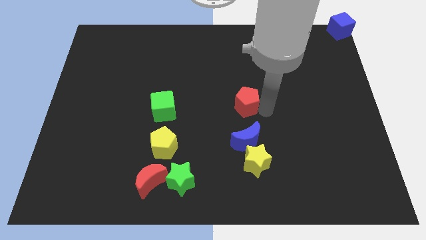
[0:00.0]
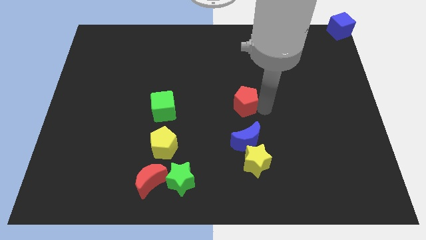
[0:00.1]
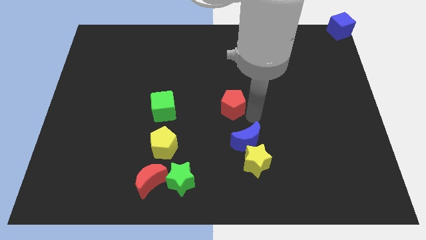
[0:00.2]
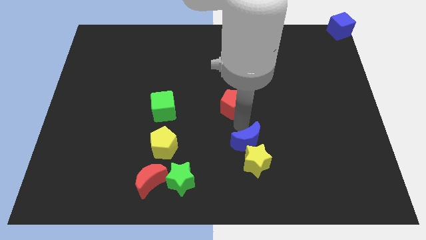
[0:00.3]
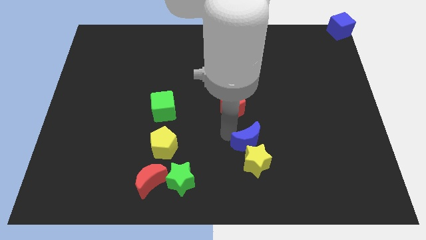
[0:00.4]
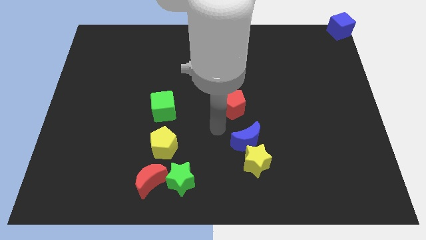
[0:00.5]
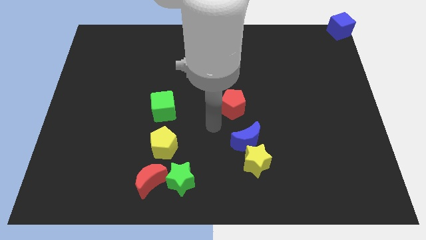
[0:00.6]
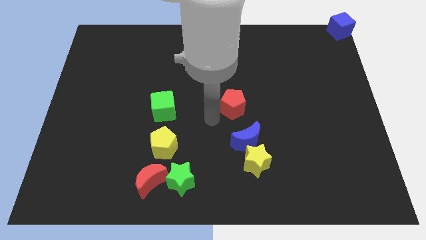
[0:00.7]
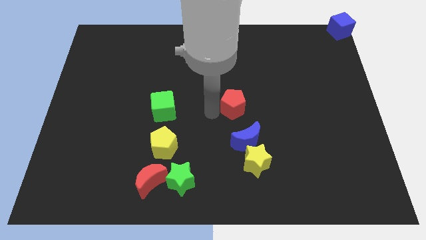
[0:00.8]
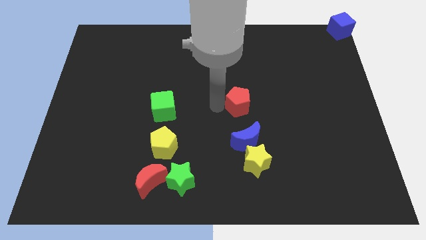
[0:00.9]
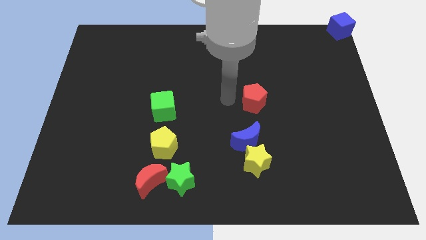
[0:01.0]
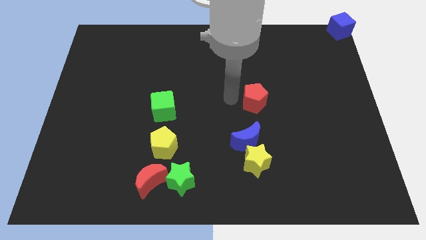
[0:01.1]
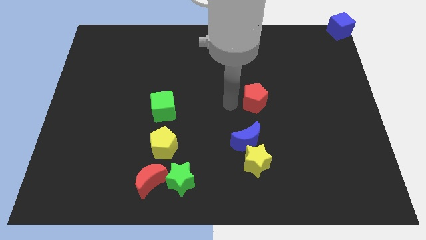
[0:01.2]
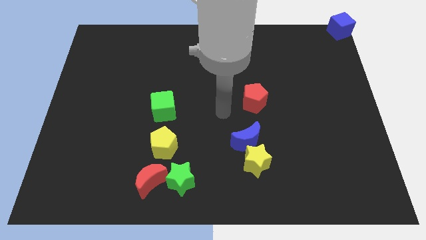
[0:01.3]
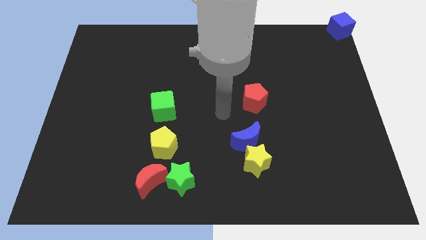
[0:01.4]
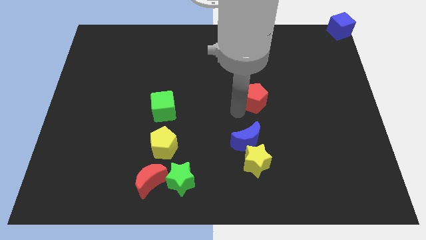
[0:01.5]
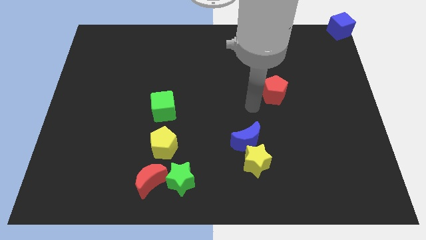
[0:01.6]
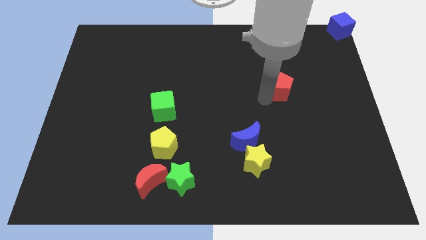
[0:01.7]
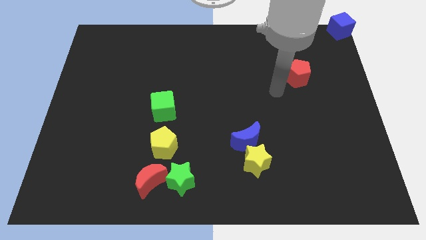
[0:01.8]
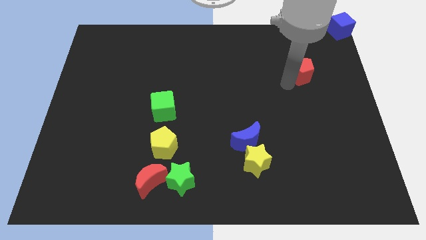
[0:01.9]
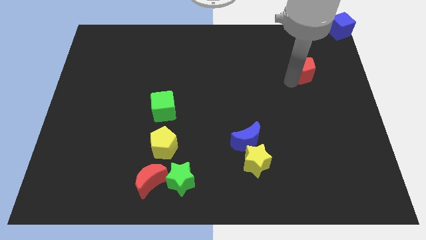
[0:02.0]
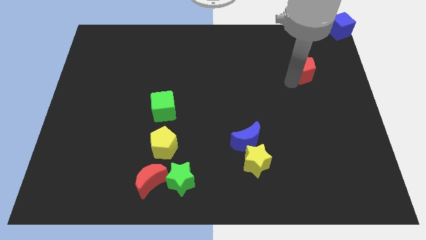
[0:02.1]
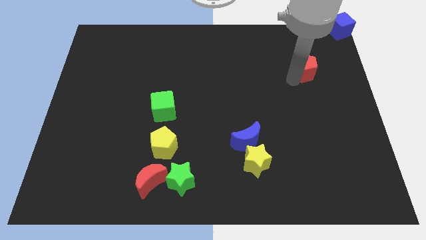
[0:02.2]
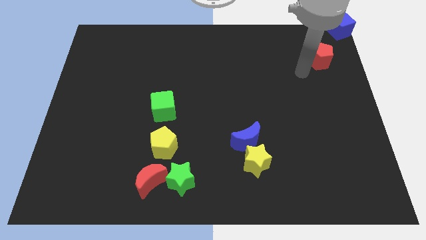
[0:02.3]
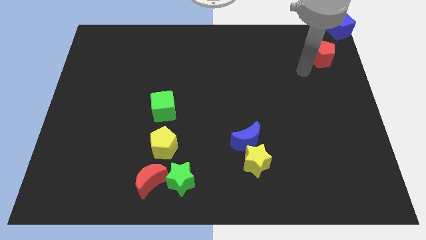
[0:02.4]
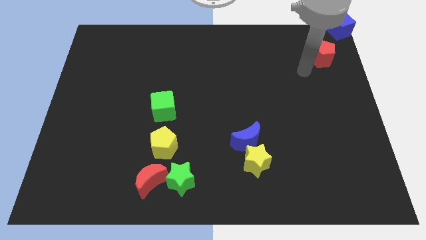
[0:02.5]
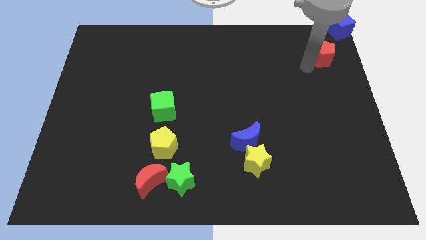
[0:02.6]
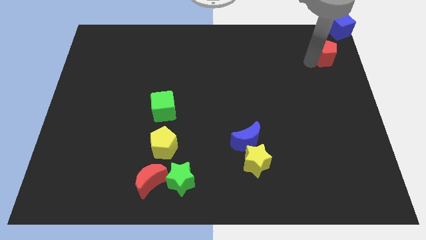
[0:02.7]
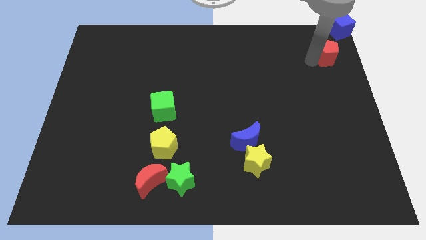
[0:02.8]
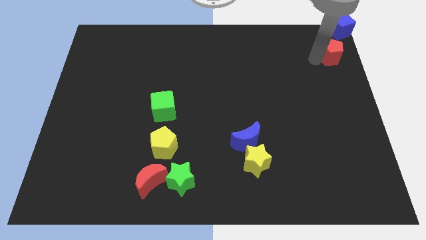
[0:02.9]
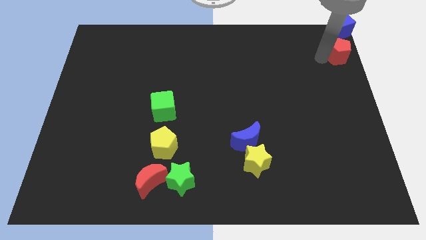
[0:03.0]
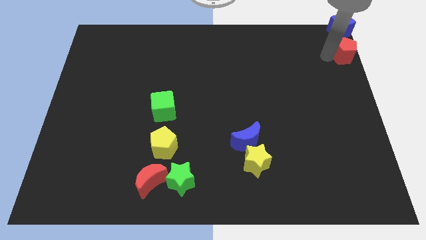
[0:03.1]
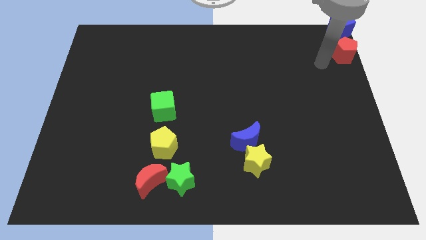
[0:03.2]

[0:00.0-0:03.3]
place the red pentagon diagonally to blue moon

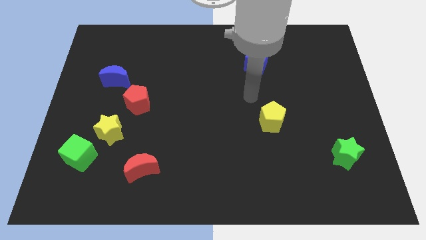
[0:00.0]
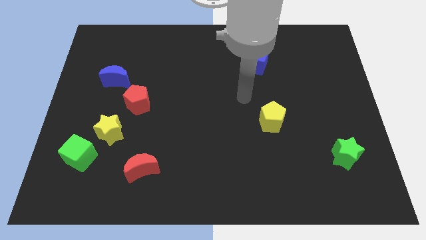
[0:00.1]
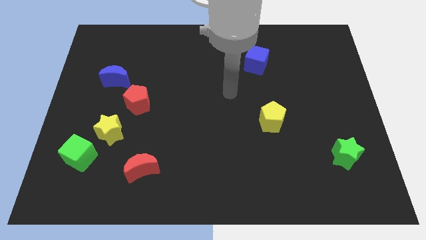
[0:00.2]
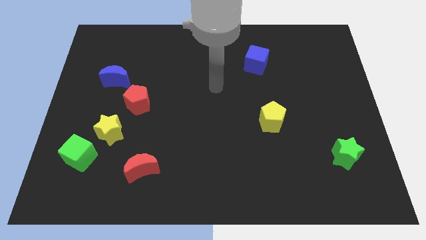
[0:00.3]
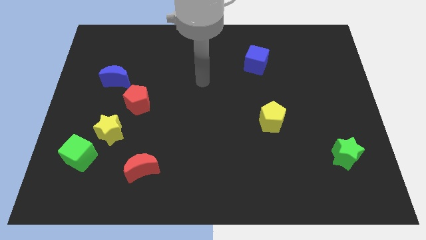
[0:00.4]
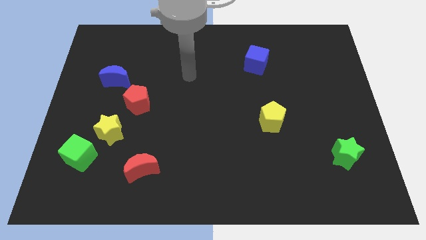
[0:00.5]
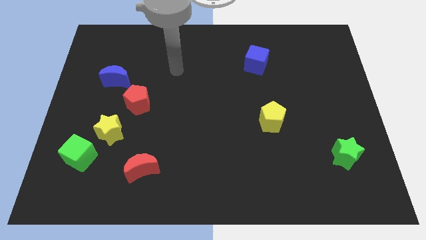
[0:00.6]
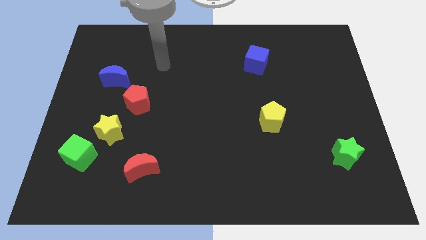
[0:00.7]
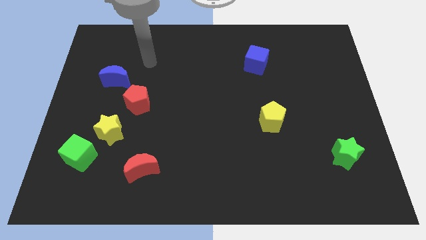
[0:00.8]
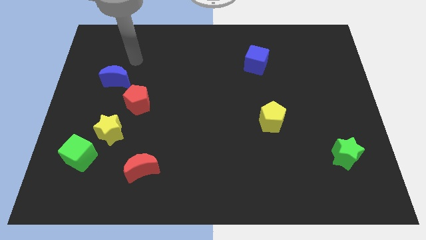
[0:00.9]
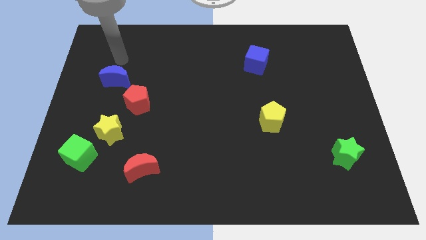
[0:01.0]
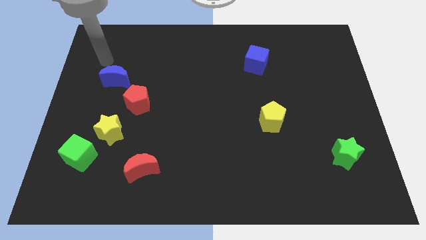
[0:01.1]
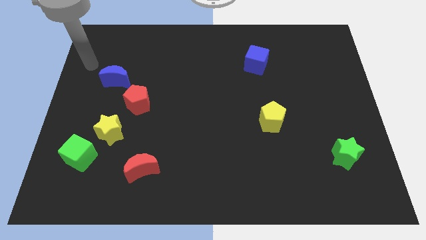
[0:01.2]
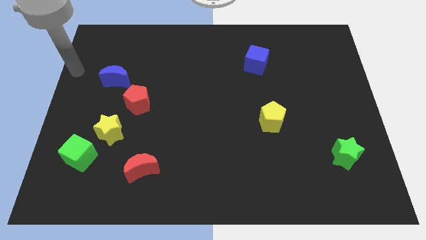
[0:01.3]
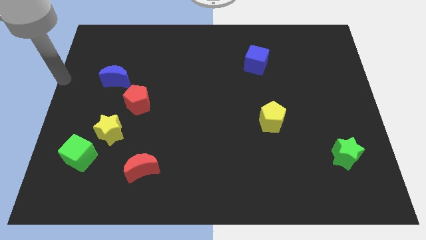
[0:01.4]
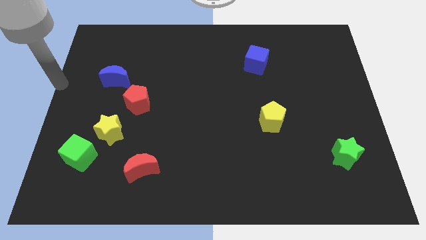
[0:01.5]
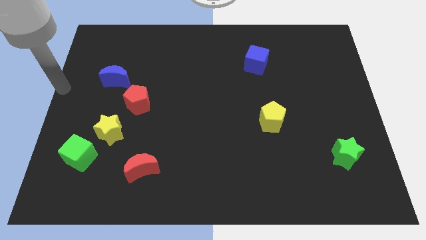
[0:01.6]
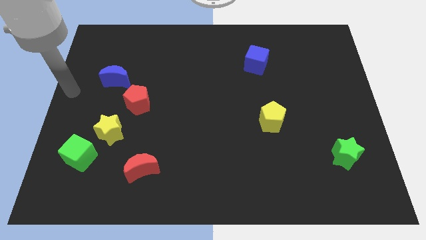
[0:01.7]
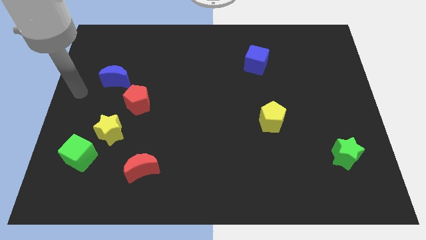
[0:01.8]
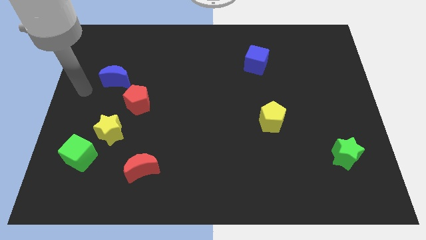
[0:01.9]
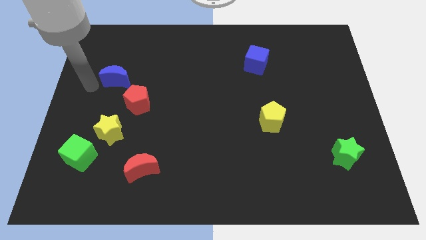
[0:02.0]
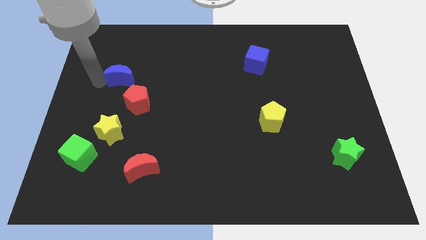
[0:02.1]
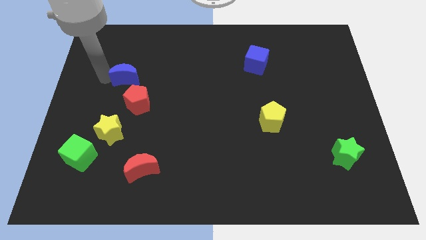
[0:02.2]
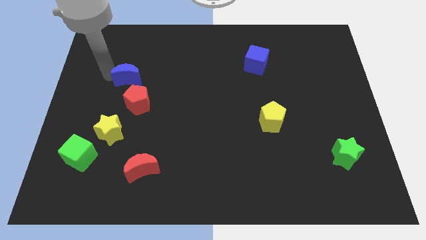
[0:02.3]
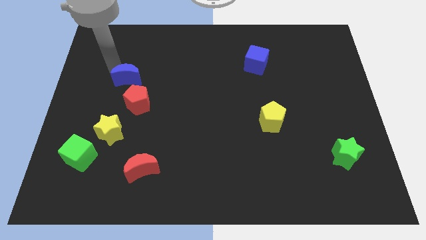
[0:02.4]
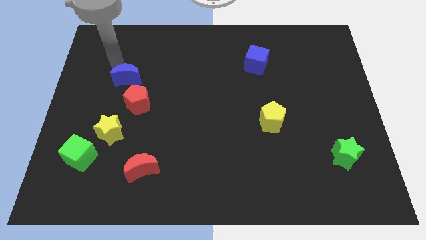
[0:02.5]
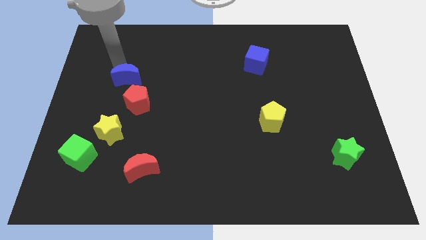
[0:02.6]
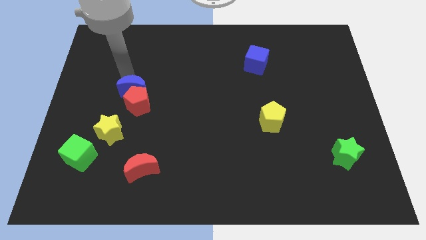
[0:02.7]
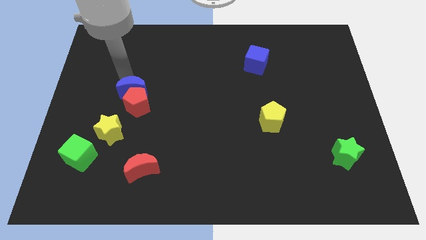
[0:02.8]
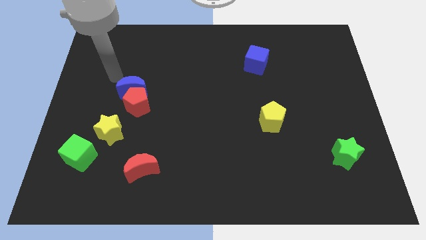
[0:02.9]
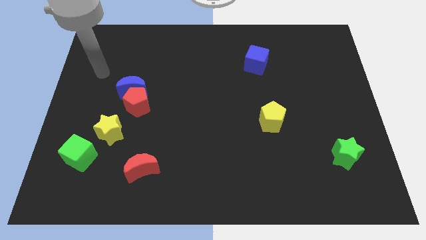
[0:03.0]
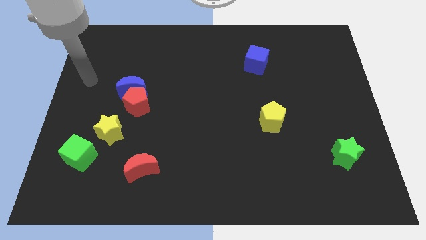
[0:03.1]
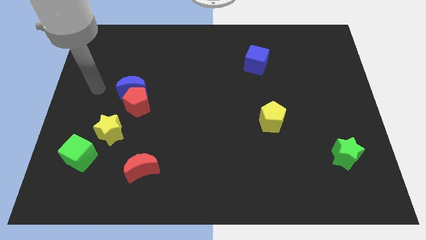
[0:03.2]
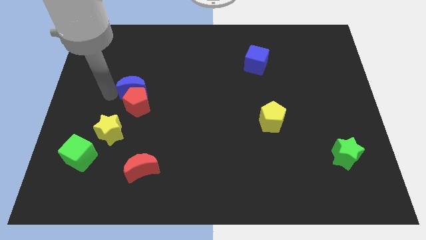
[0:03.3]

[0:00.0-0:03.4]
push the blue crescent into the red pentagon

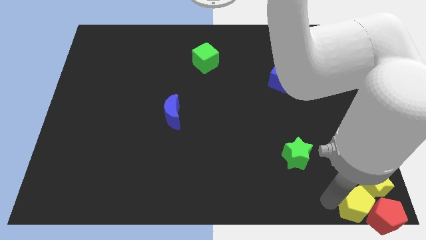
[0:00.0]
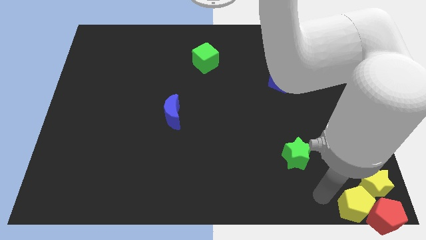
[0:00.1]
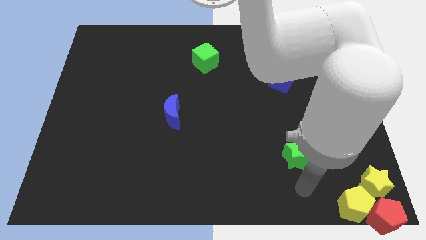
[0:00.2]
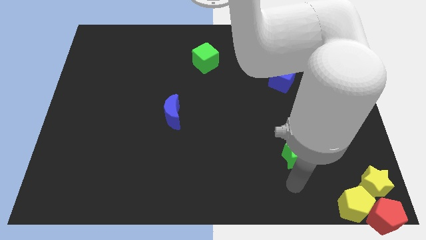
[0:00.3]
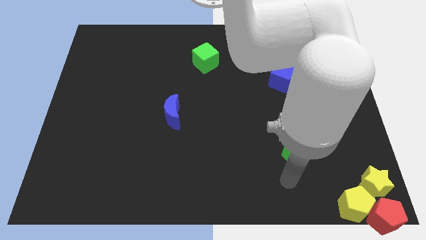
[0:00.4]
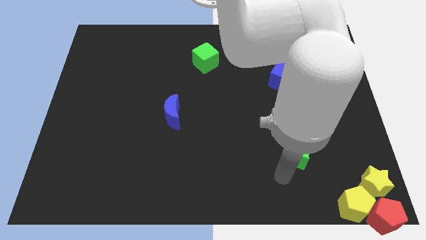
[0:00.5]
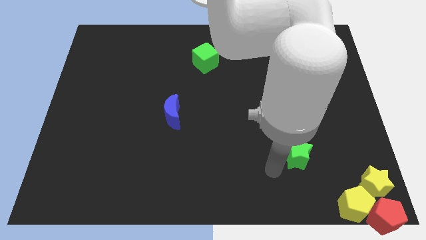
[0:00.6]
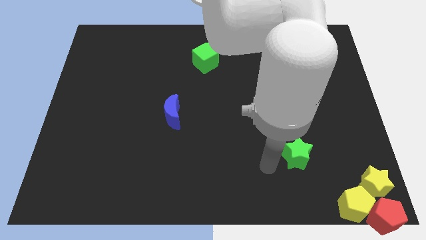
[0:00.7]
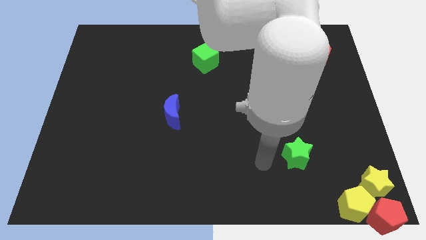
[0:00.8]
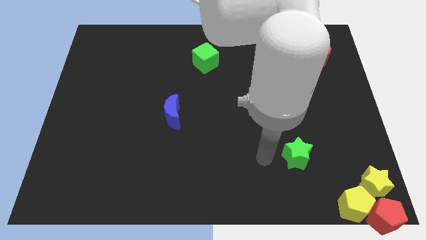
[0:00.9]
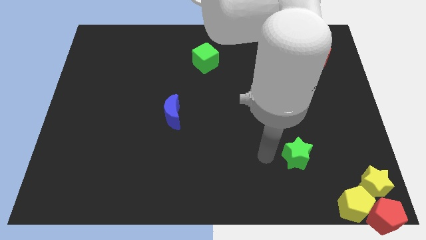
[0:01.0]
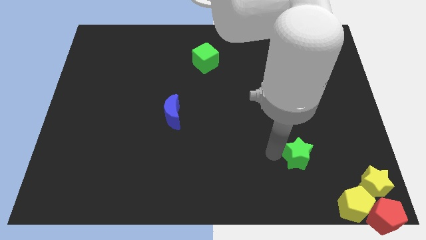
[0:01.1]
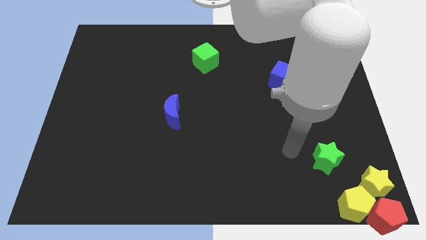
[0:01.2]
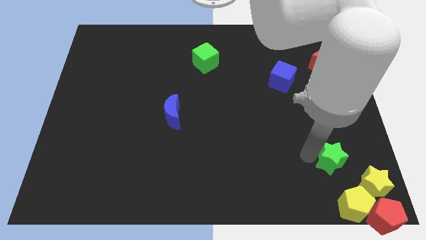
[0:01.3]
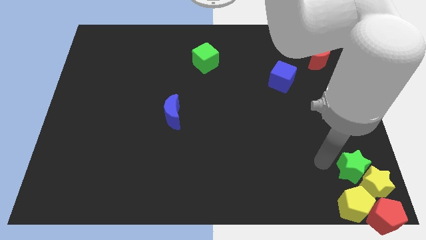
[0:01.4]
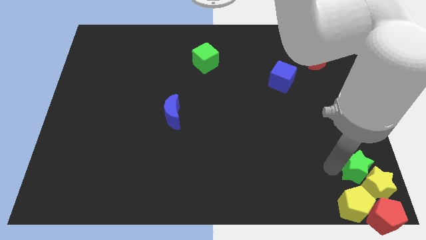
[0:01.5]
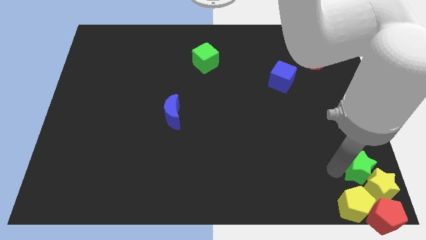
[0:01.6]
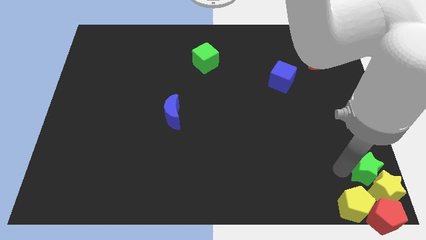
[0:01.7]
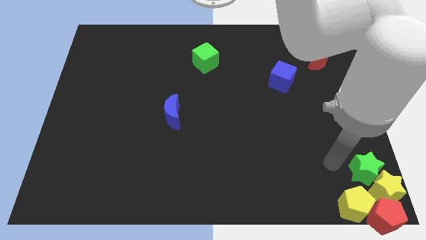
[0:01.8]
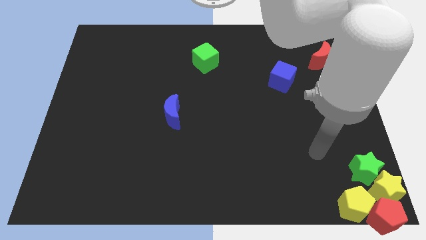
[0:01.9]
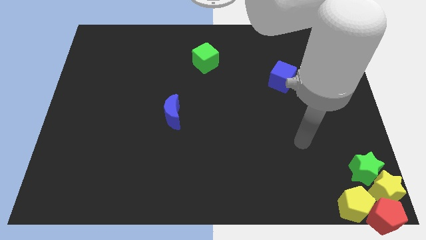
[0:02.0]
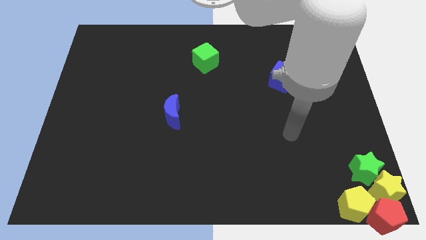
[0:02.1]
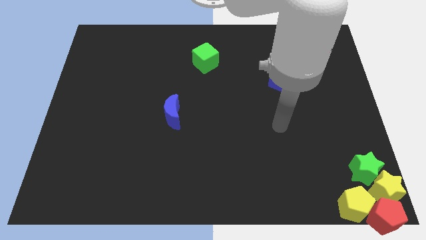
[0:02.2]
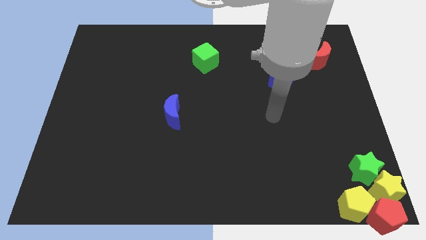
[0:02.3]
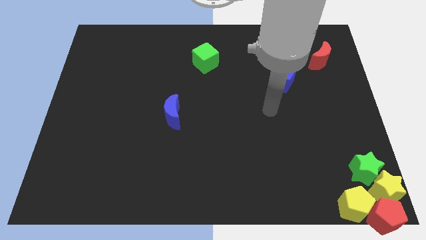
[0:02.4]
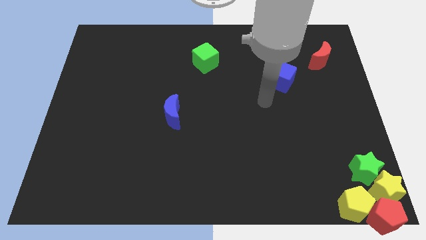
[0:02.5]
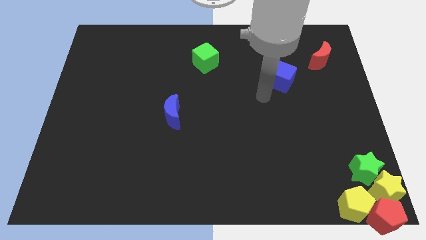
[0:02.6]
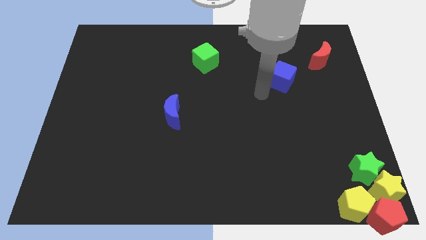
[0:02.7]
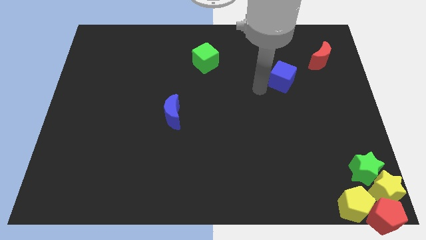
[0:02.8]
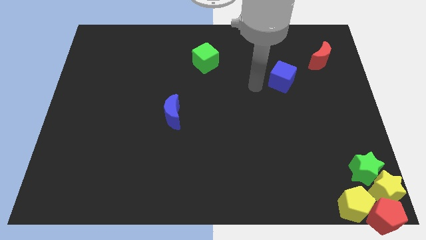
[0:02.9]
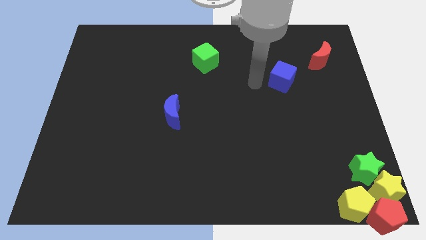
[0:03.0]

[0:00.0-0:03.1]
push the green star into the yellow star
